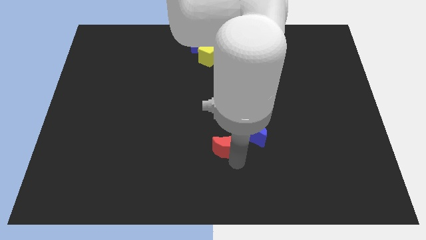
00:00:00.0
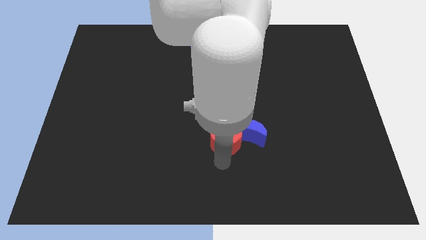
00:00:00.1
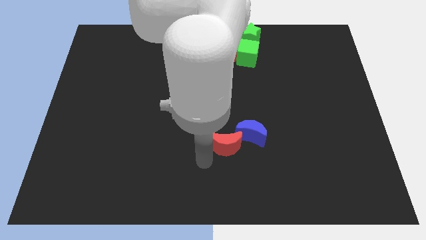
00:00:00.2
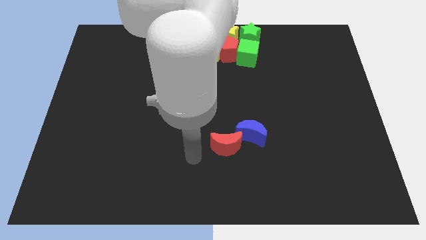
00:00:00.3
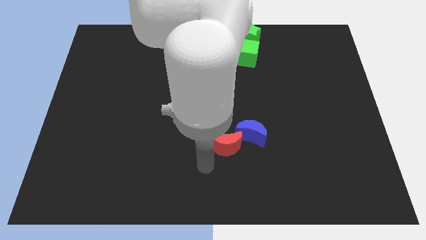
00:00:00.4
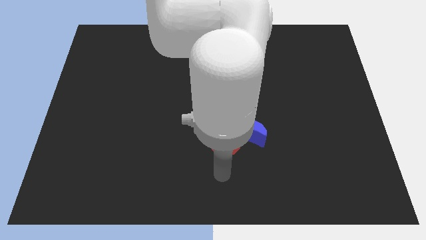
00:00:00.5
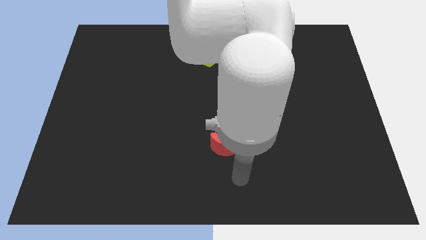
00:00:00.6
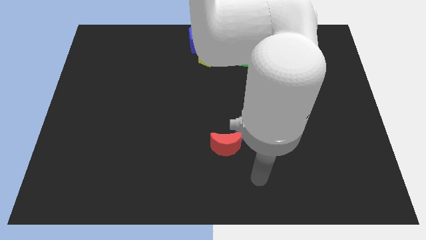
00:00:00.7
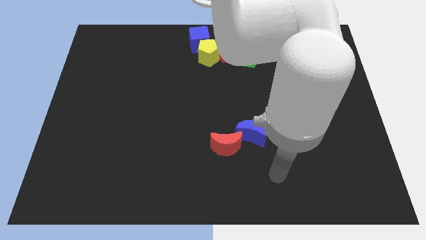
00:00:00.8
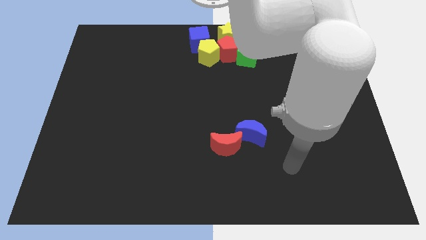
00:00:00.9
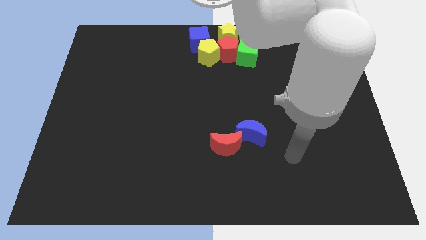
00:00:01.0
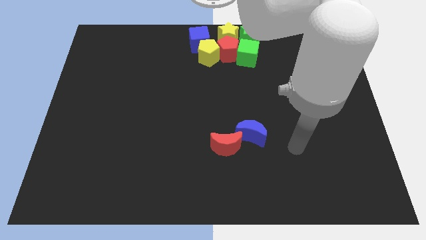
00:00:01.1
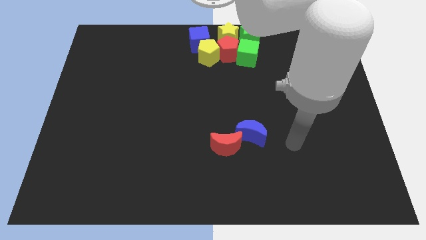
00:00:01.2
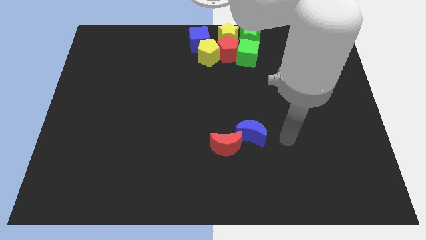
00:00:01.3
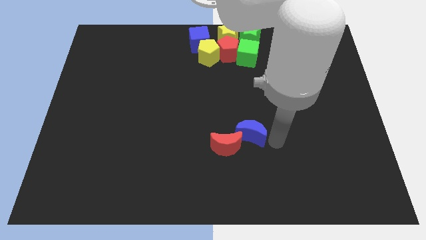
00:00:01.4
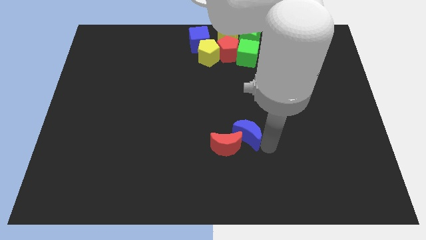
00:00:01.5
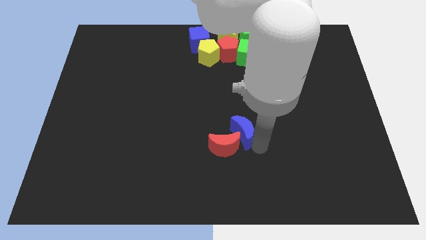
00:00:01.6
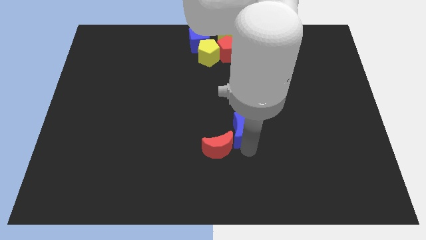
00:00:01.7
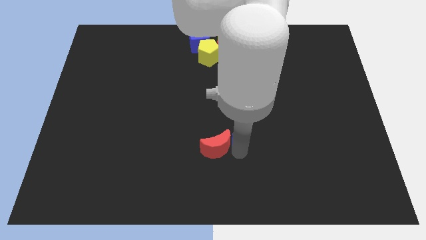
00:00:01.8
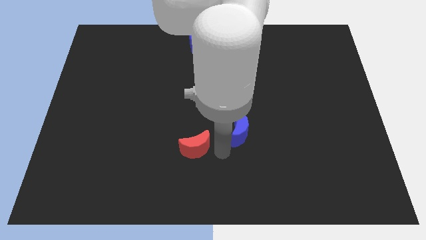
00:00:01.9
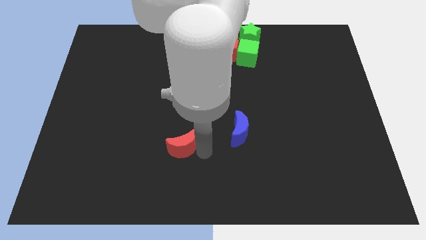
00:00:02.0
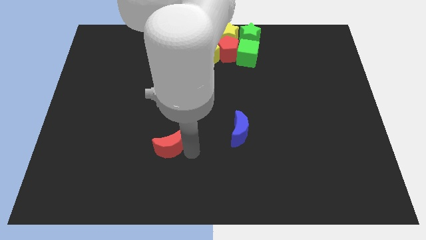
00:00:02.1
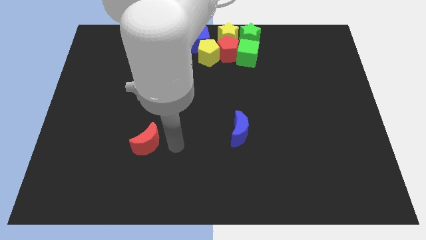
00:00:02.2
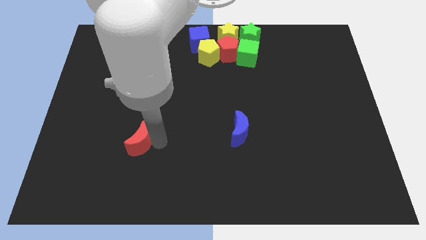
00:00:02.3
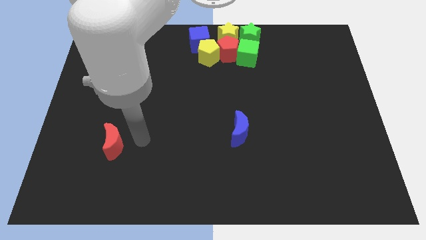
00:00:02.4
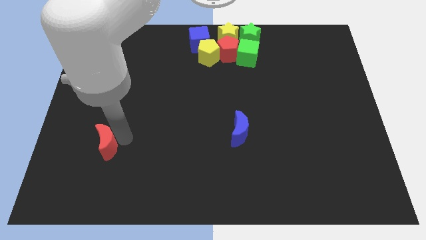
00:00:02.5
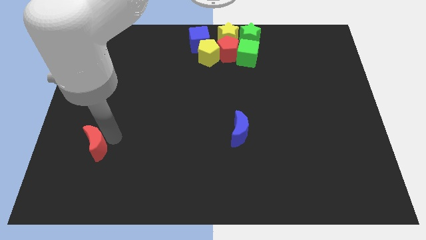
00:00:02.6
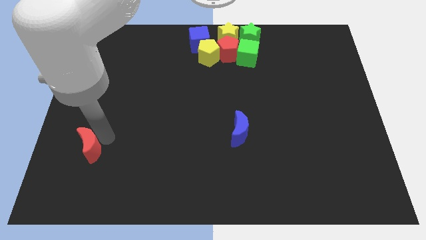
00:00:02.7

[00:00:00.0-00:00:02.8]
separate the red moon from blue moon towards left

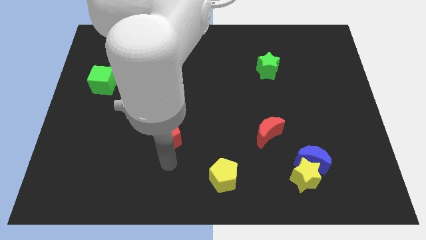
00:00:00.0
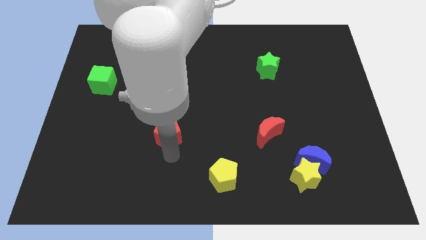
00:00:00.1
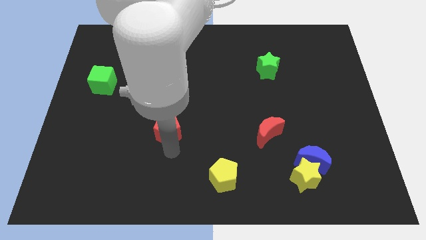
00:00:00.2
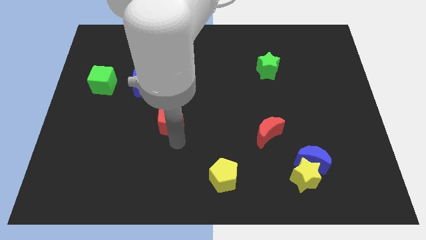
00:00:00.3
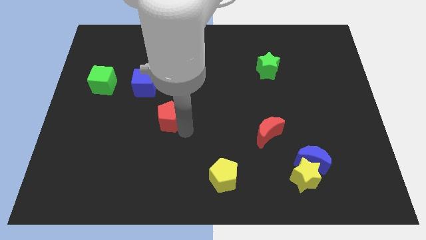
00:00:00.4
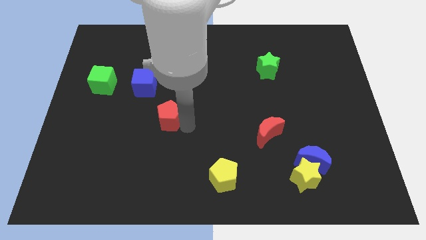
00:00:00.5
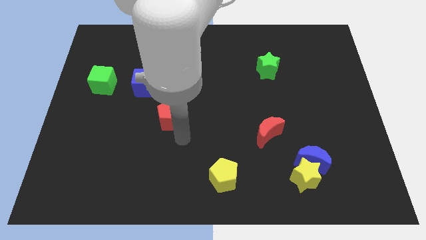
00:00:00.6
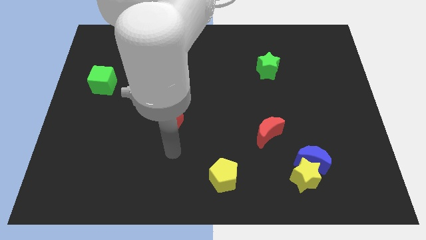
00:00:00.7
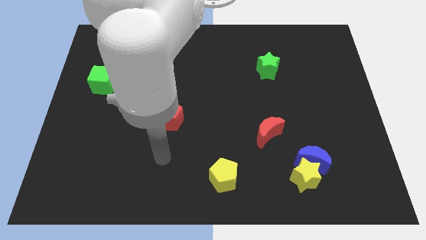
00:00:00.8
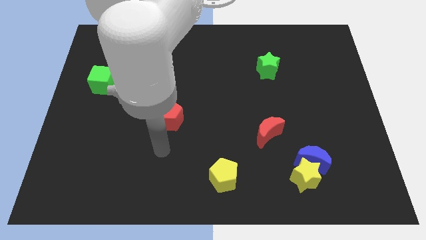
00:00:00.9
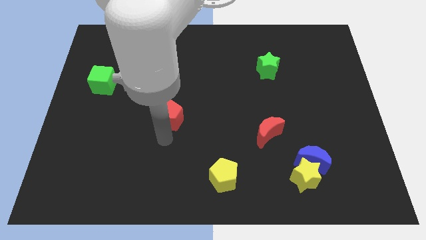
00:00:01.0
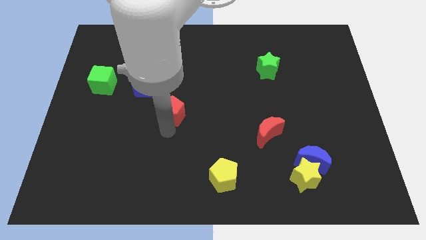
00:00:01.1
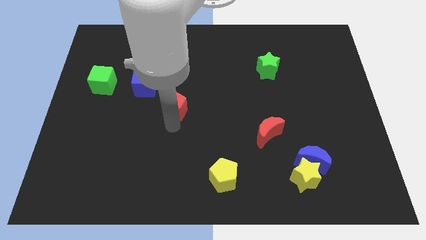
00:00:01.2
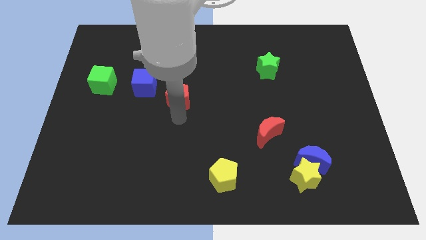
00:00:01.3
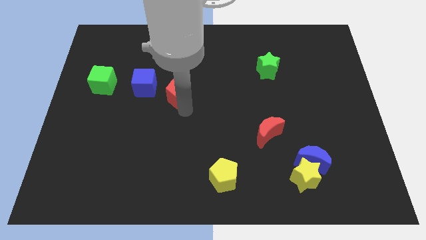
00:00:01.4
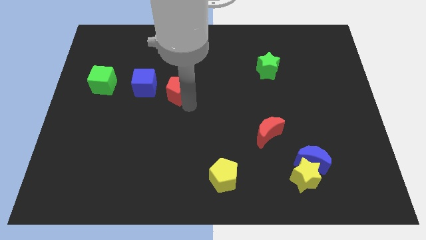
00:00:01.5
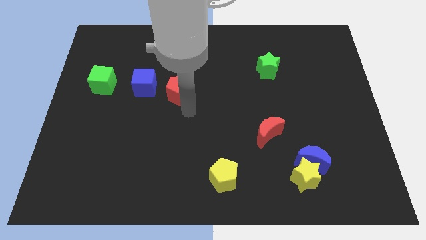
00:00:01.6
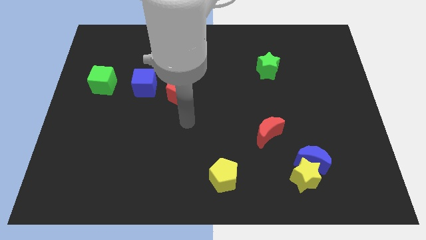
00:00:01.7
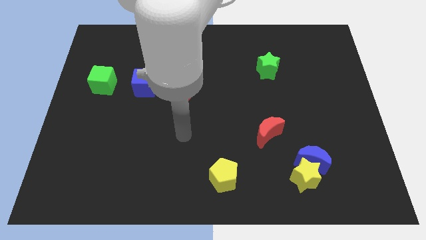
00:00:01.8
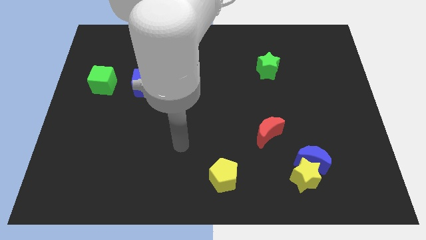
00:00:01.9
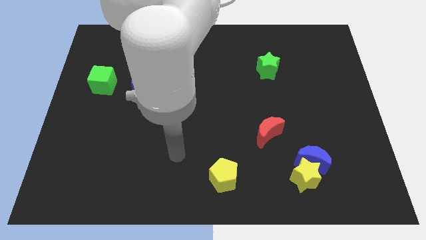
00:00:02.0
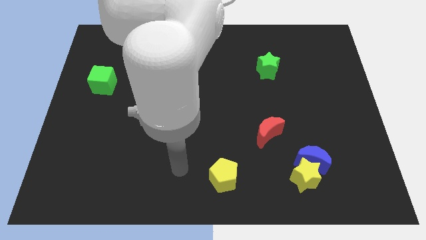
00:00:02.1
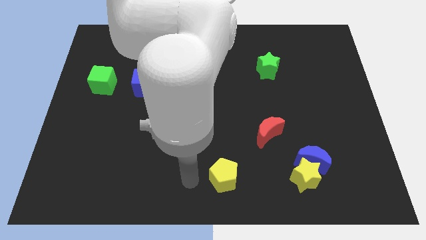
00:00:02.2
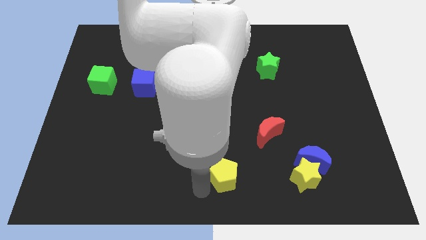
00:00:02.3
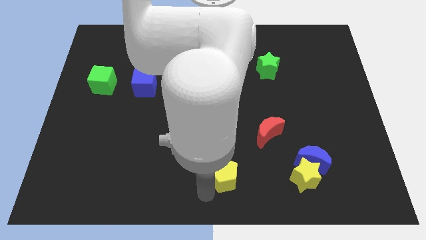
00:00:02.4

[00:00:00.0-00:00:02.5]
push the red pentagon right to the blue cube

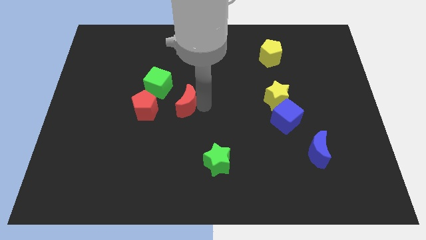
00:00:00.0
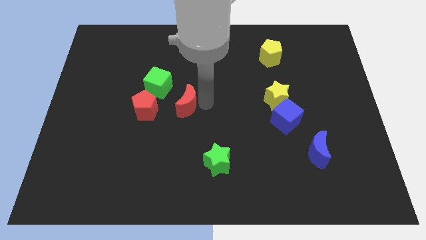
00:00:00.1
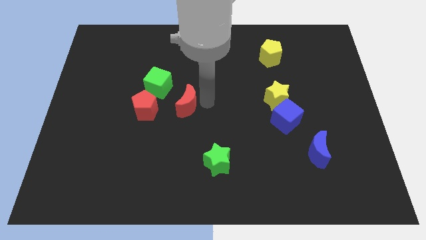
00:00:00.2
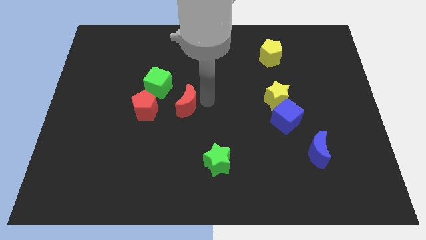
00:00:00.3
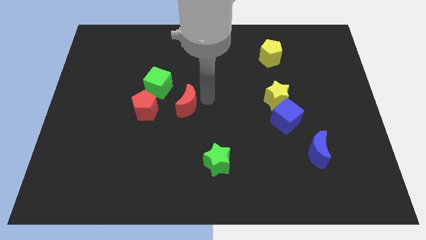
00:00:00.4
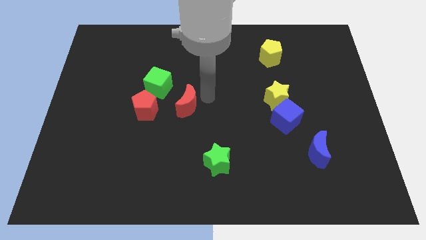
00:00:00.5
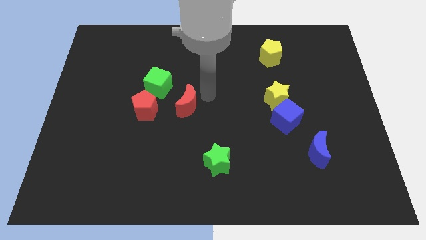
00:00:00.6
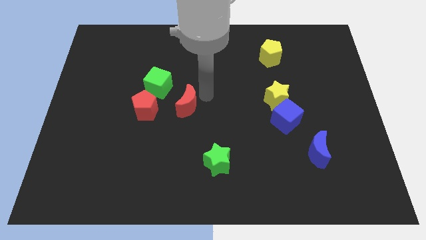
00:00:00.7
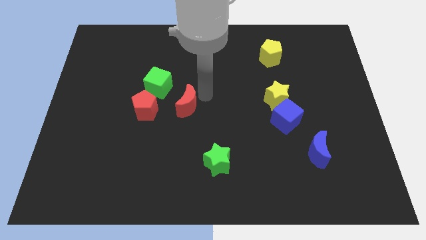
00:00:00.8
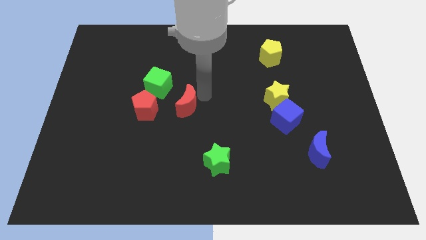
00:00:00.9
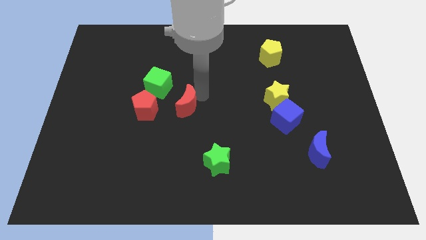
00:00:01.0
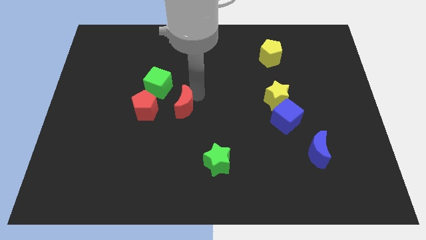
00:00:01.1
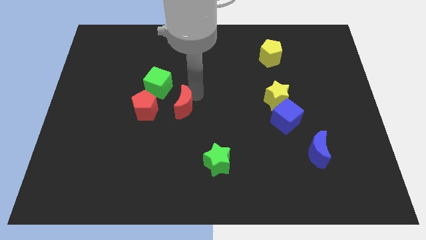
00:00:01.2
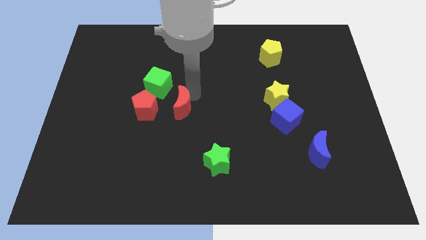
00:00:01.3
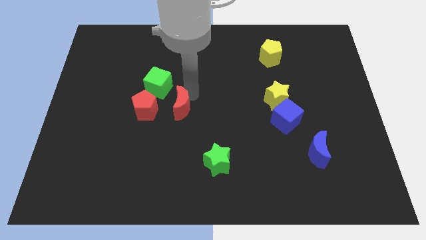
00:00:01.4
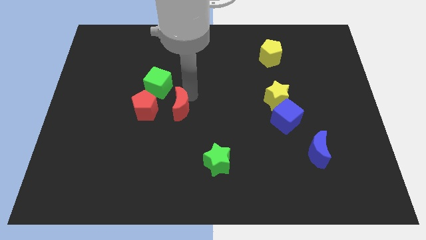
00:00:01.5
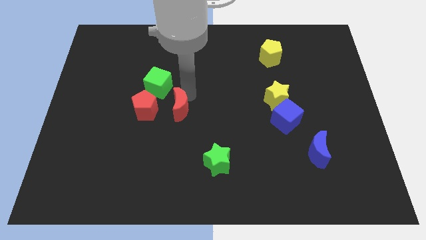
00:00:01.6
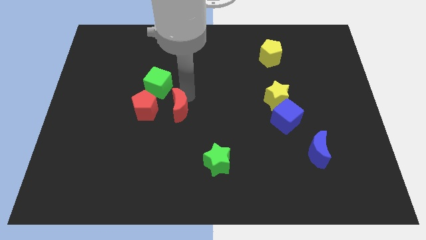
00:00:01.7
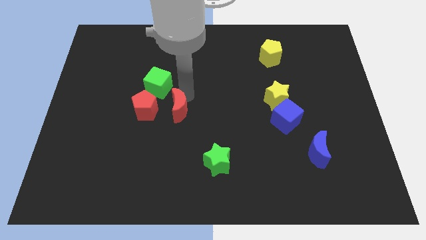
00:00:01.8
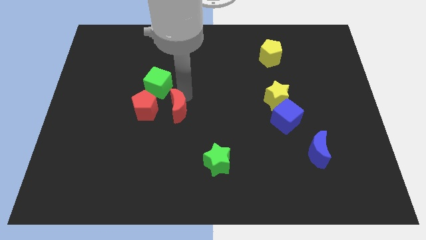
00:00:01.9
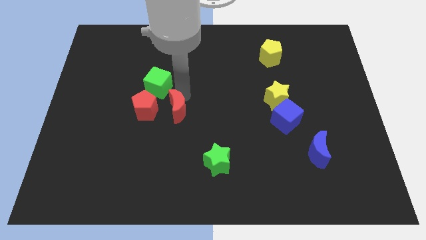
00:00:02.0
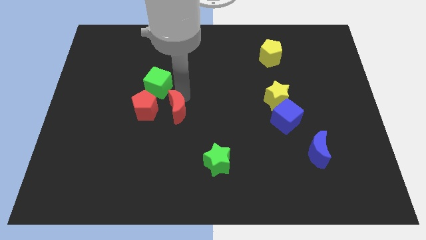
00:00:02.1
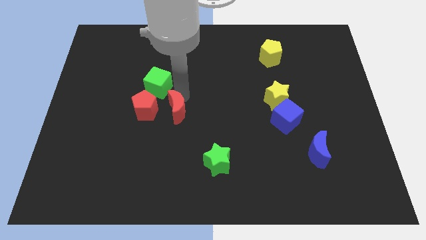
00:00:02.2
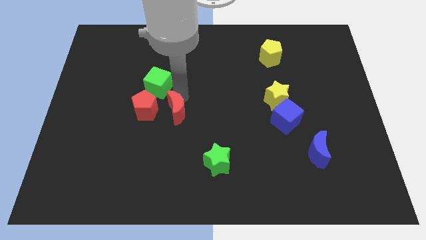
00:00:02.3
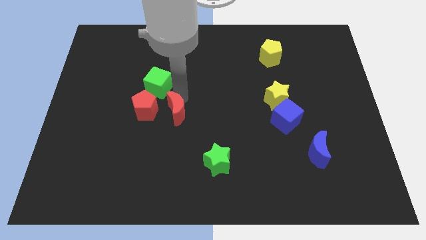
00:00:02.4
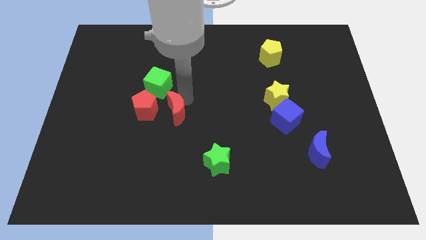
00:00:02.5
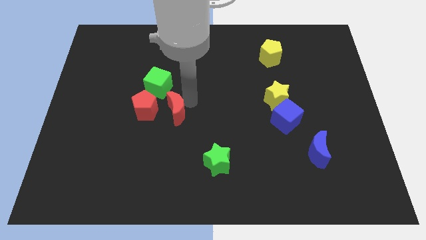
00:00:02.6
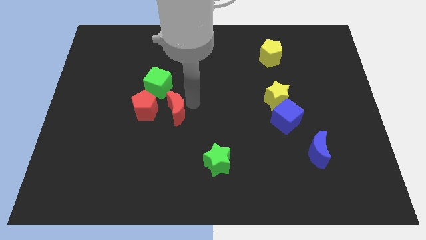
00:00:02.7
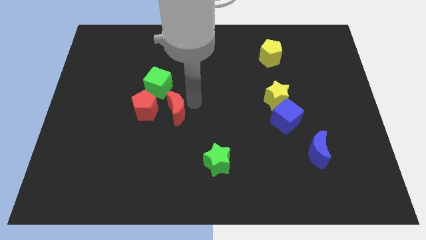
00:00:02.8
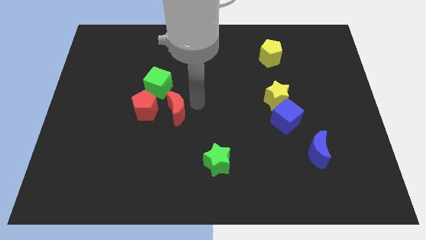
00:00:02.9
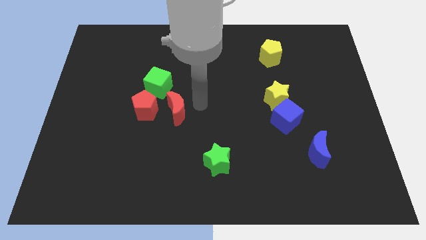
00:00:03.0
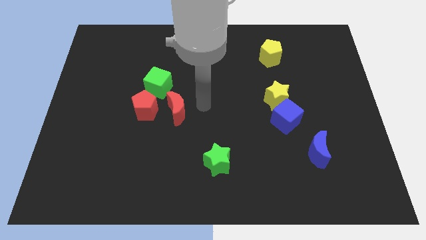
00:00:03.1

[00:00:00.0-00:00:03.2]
drag the red moon slightly to the left

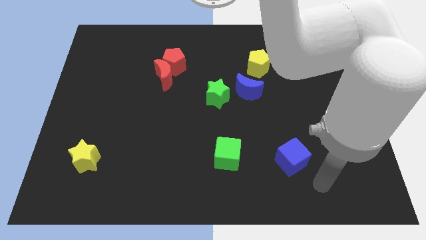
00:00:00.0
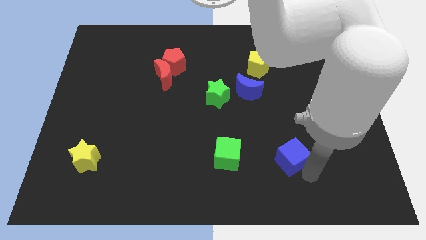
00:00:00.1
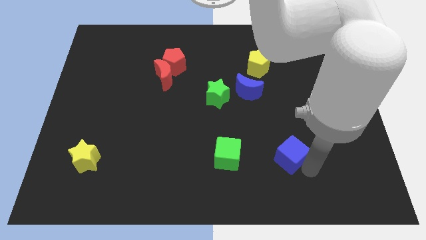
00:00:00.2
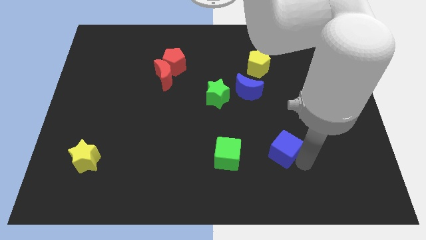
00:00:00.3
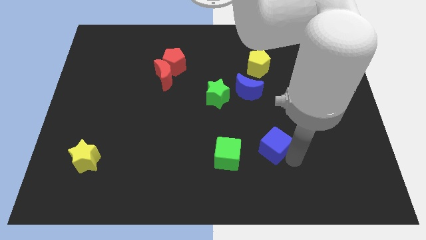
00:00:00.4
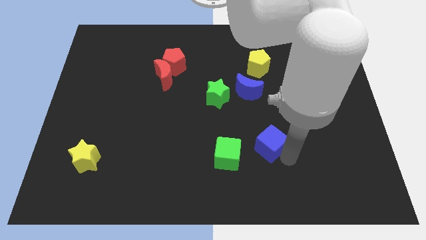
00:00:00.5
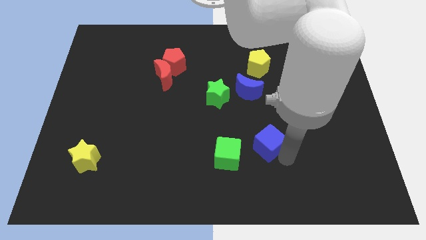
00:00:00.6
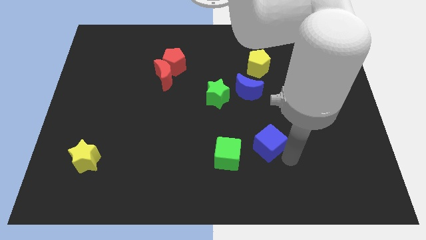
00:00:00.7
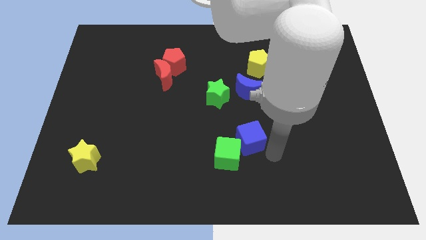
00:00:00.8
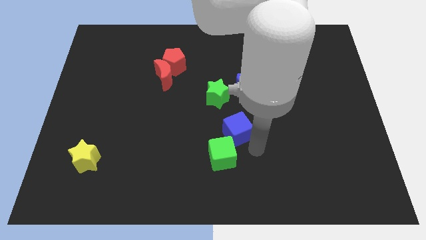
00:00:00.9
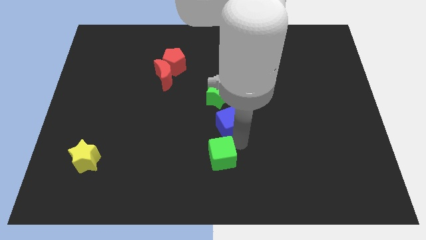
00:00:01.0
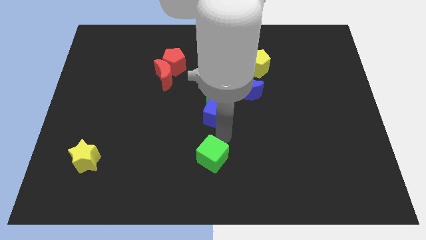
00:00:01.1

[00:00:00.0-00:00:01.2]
place the blue cube in between the green blocks
